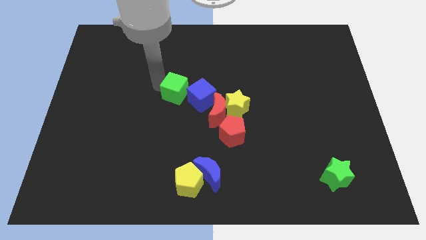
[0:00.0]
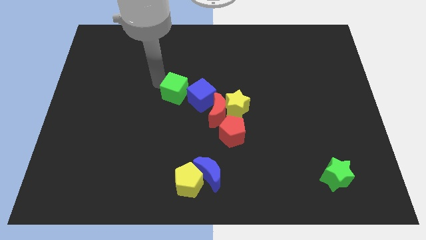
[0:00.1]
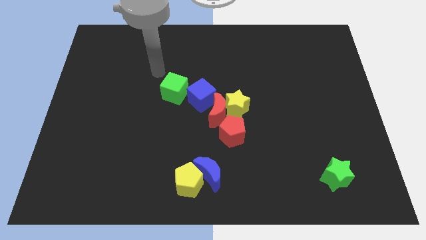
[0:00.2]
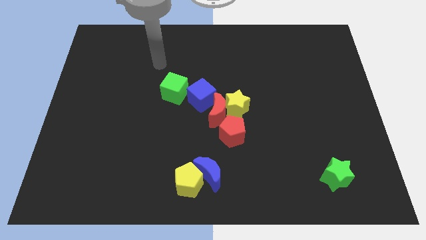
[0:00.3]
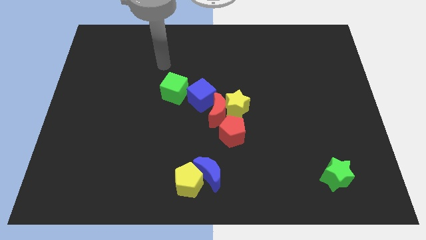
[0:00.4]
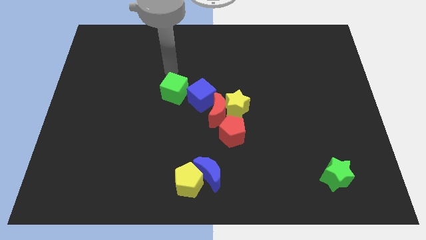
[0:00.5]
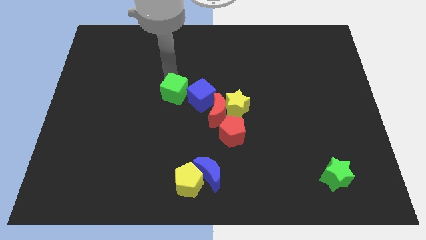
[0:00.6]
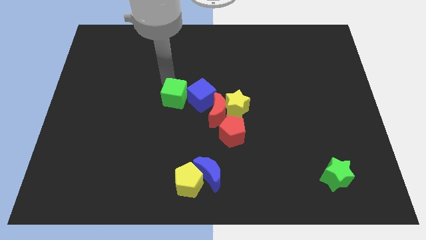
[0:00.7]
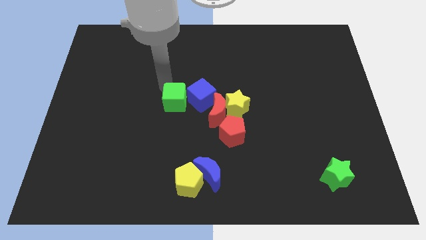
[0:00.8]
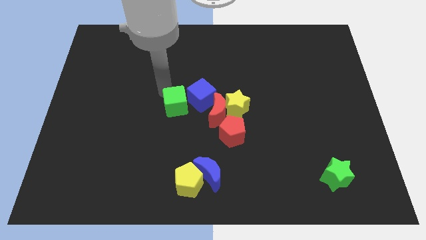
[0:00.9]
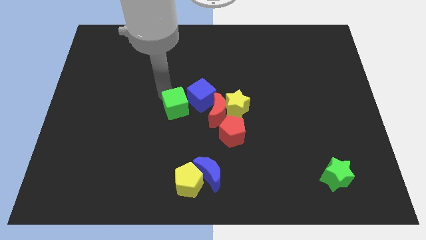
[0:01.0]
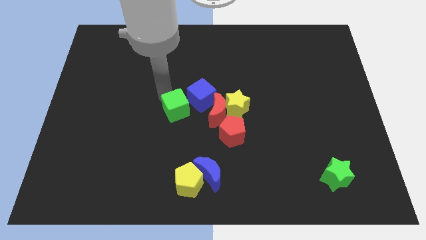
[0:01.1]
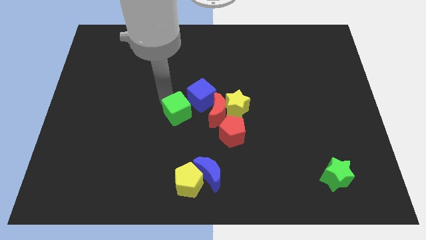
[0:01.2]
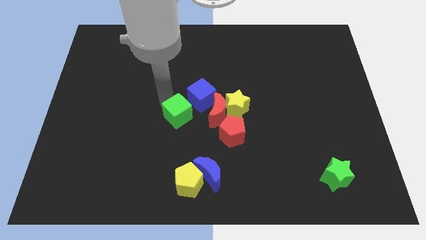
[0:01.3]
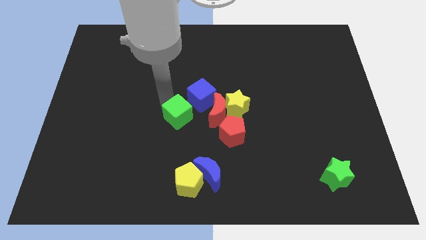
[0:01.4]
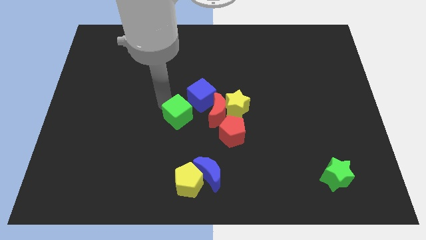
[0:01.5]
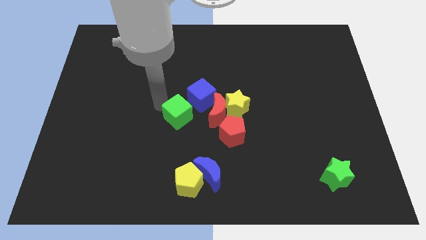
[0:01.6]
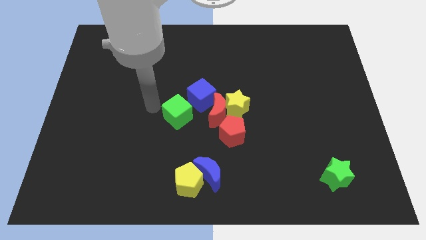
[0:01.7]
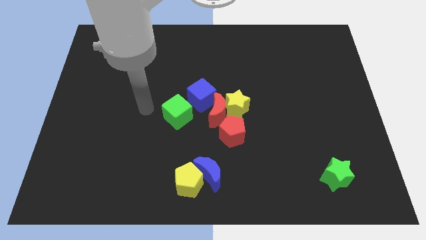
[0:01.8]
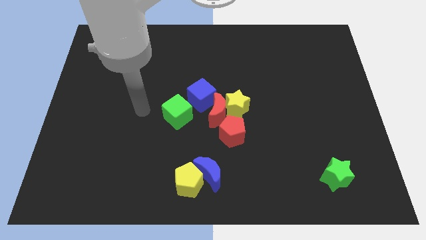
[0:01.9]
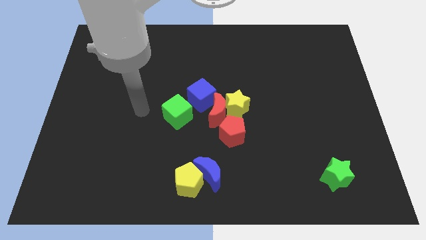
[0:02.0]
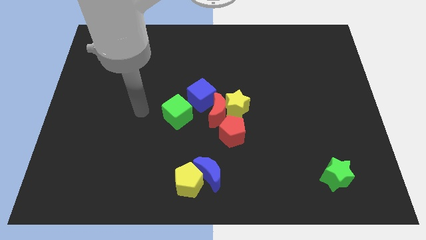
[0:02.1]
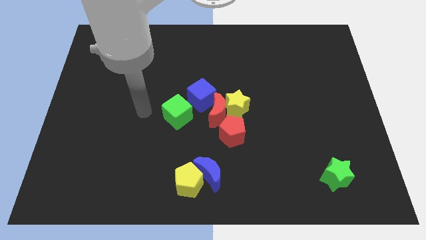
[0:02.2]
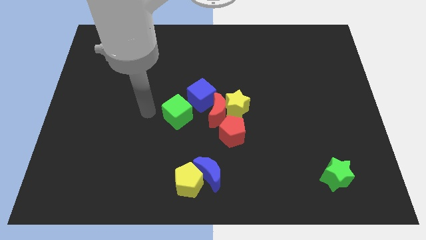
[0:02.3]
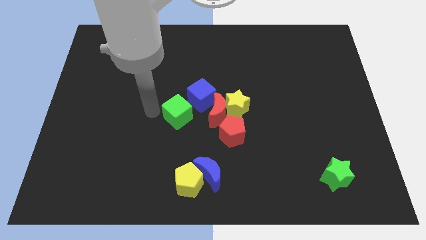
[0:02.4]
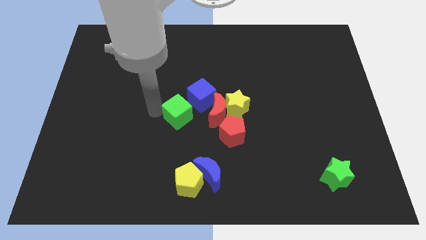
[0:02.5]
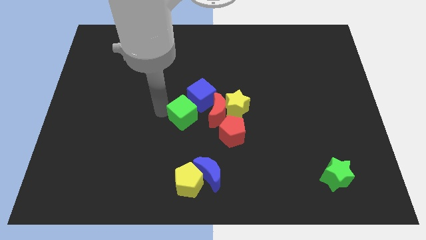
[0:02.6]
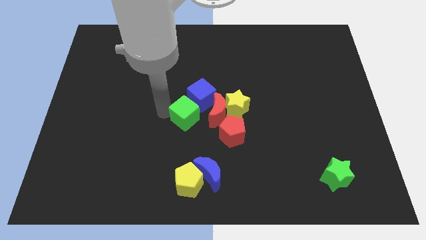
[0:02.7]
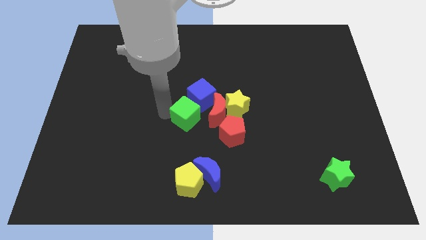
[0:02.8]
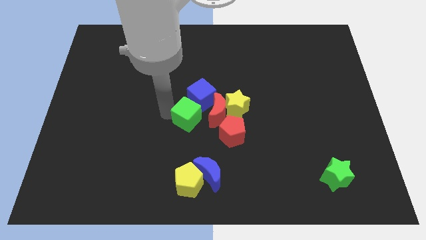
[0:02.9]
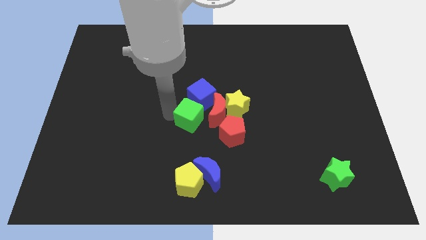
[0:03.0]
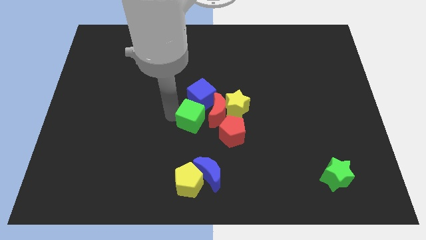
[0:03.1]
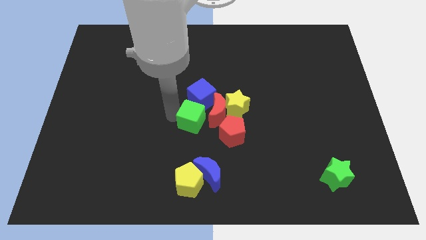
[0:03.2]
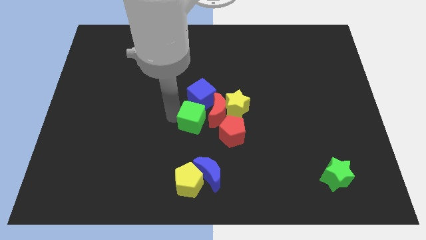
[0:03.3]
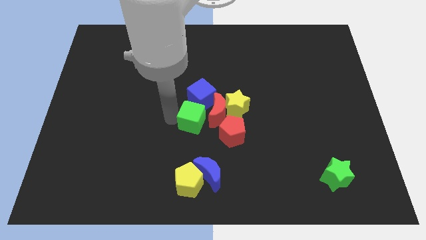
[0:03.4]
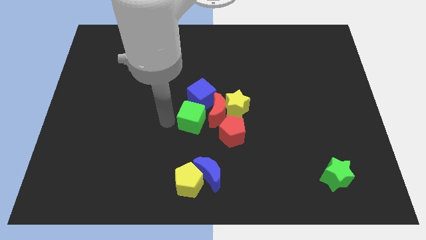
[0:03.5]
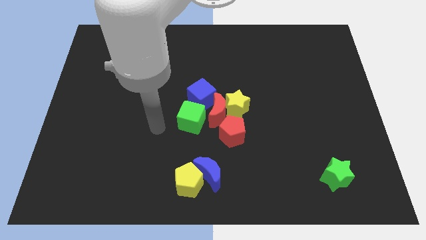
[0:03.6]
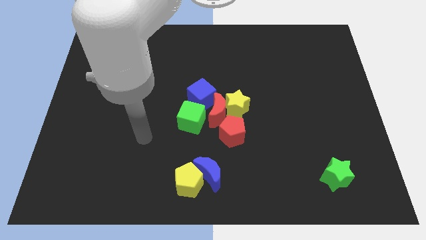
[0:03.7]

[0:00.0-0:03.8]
move the green cube to the left of the red crescent

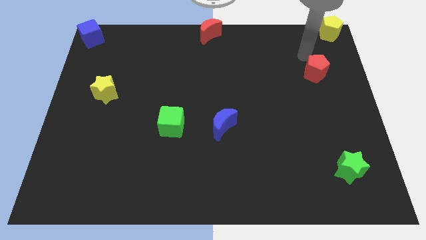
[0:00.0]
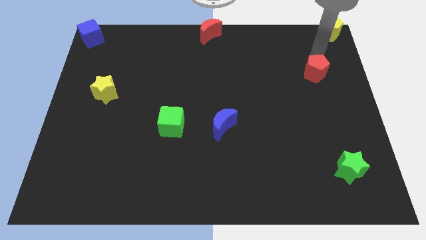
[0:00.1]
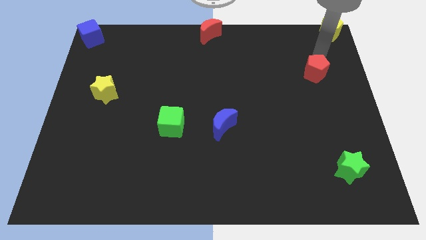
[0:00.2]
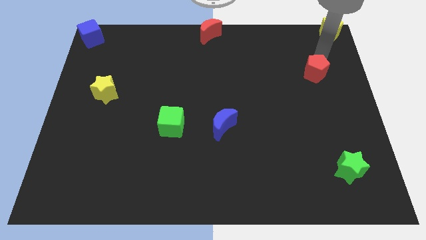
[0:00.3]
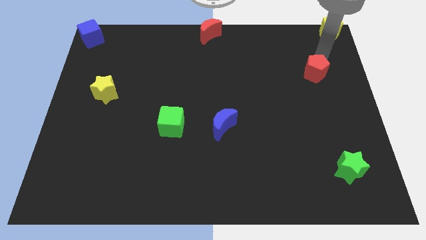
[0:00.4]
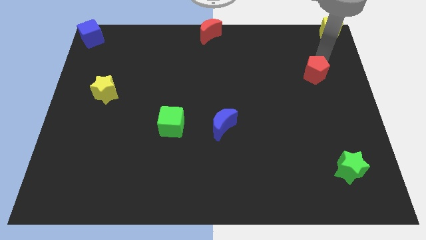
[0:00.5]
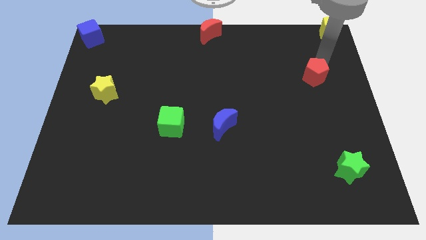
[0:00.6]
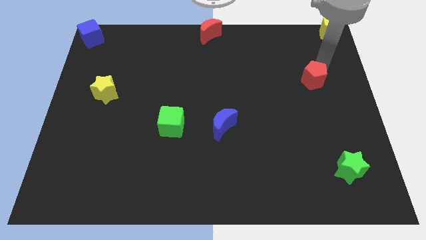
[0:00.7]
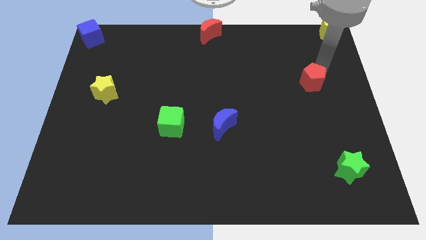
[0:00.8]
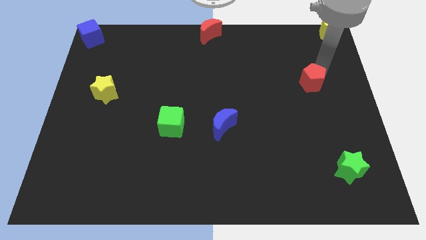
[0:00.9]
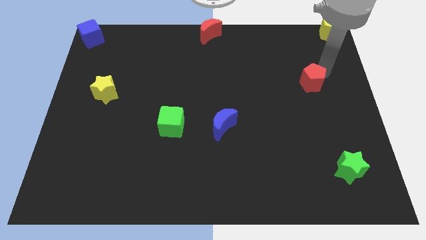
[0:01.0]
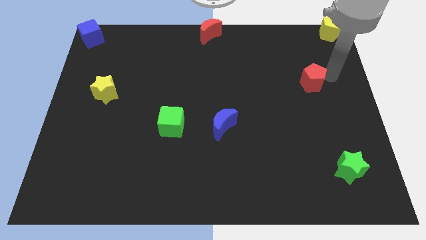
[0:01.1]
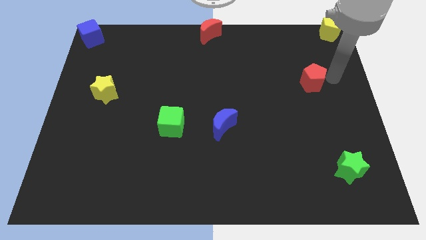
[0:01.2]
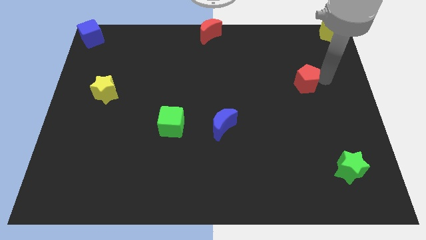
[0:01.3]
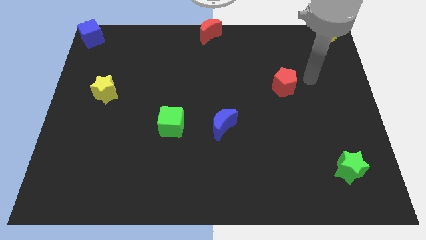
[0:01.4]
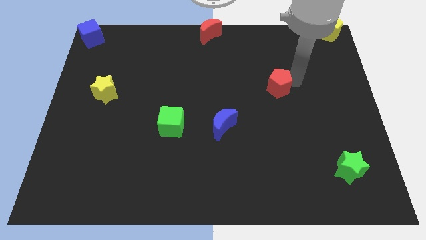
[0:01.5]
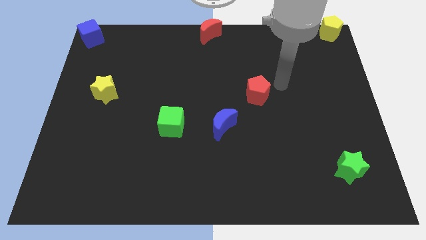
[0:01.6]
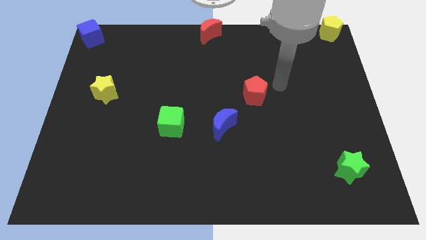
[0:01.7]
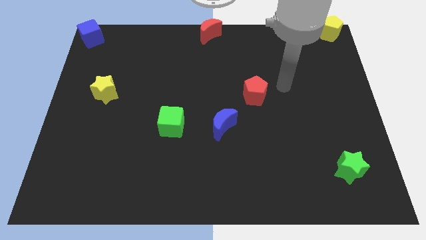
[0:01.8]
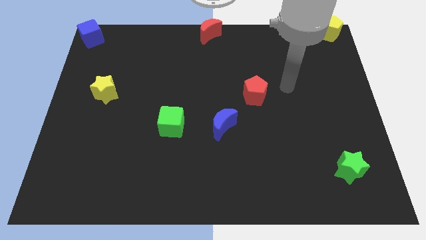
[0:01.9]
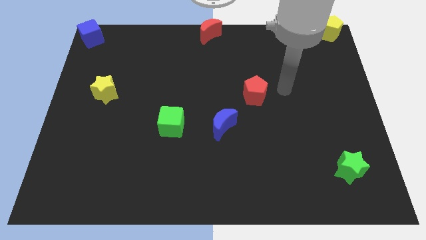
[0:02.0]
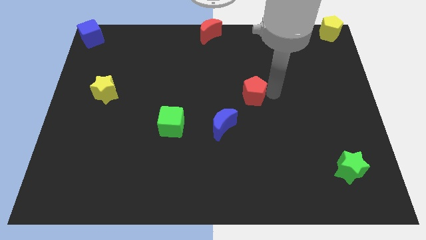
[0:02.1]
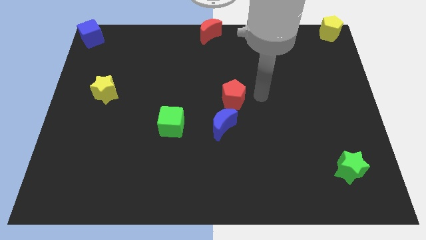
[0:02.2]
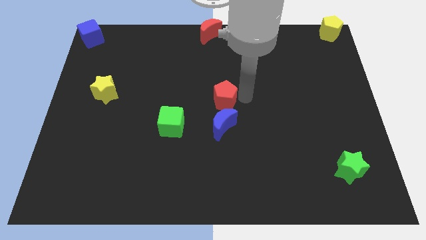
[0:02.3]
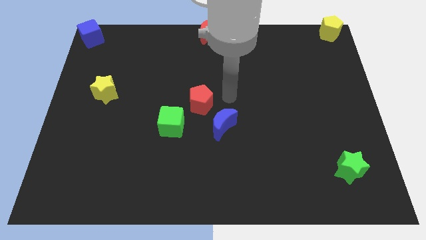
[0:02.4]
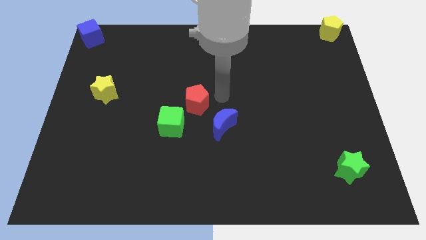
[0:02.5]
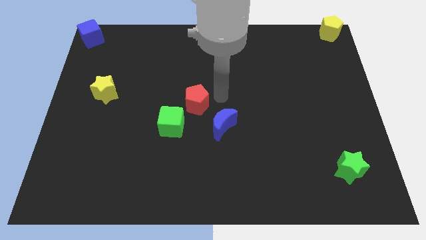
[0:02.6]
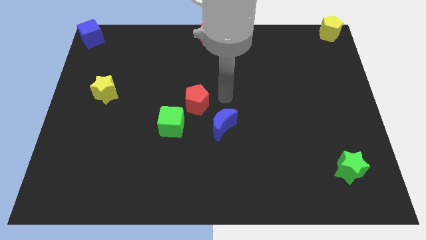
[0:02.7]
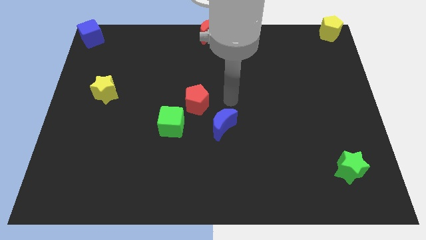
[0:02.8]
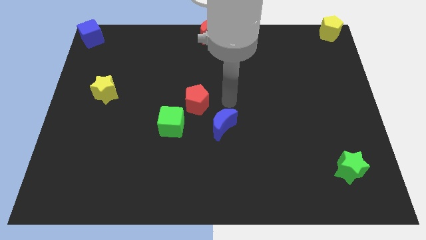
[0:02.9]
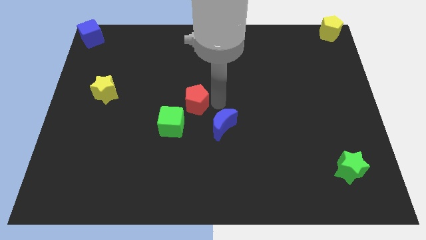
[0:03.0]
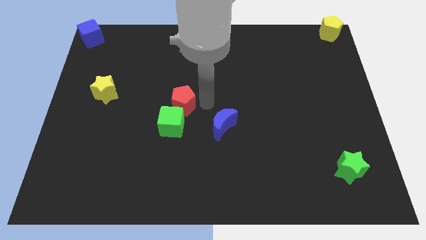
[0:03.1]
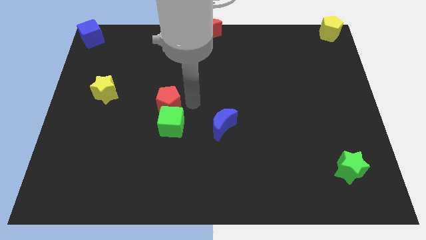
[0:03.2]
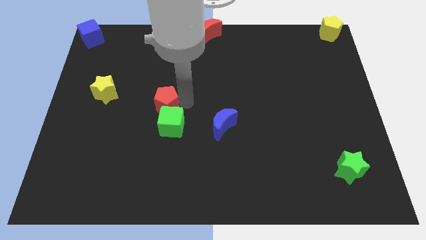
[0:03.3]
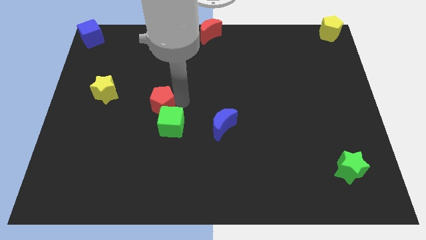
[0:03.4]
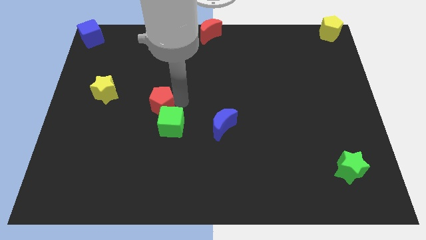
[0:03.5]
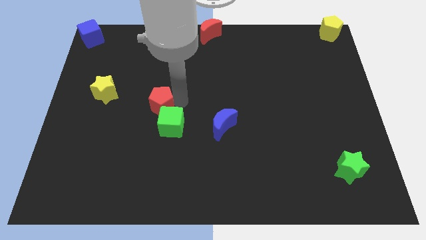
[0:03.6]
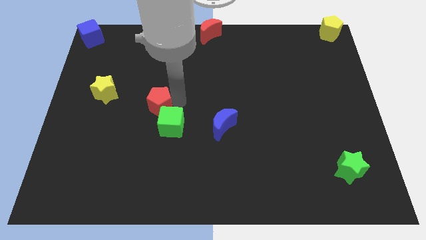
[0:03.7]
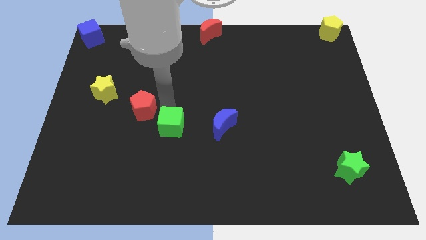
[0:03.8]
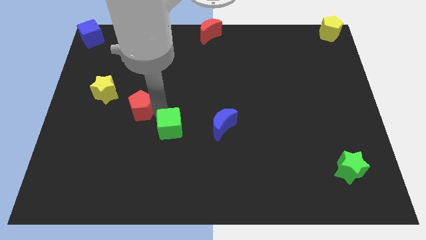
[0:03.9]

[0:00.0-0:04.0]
move the red pentagon diagonal to the green cube

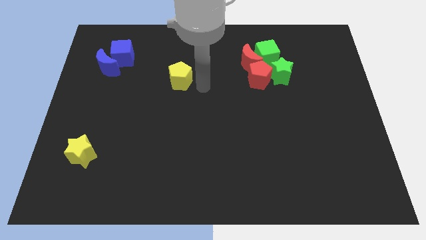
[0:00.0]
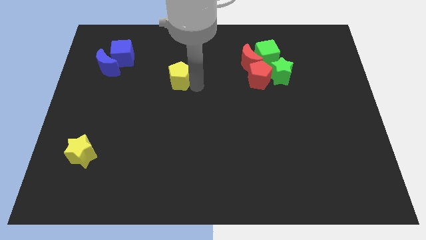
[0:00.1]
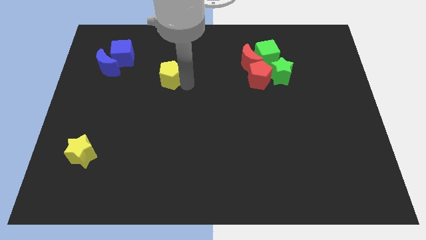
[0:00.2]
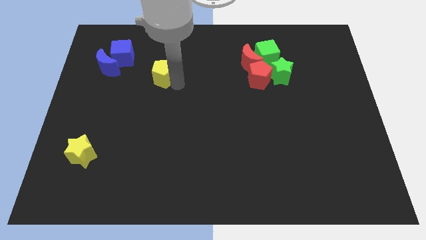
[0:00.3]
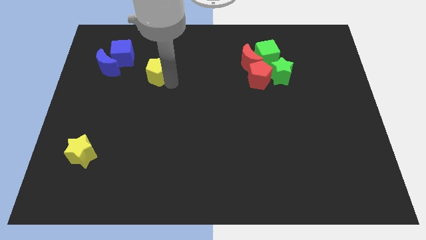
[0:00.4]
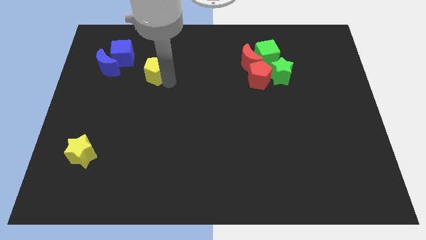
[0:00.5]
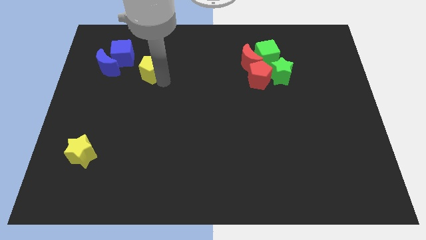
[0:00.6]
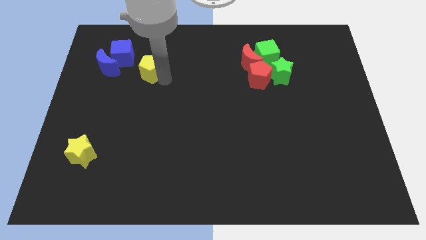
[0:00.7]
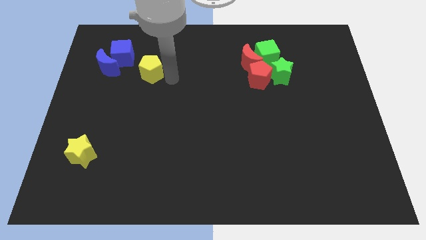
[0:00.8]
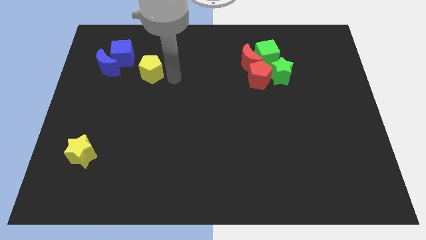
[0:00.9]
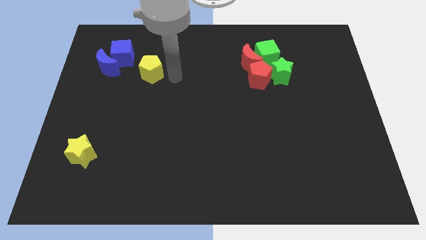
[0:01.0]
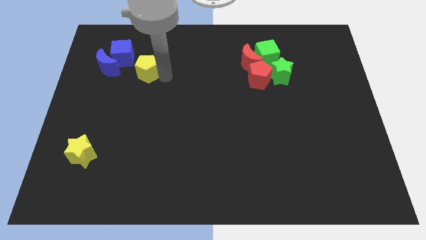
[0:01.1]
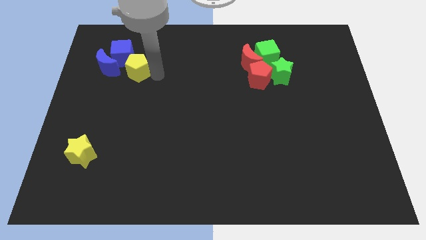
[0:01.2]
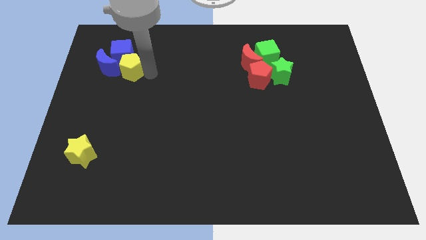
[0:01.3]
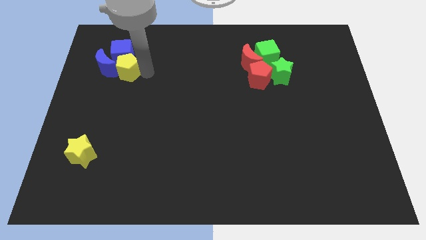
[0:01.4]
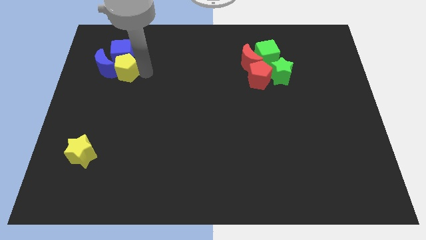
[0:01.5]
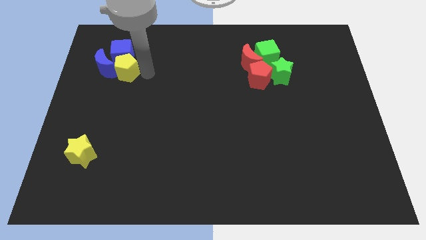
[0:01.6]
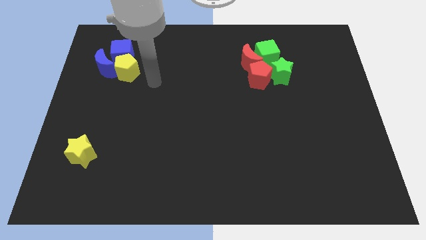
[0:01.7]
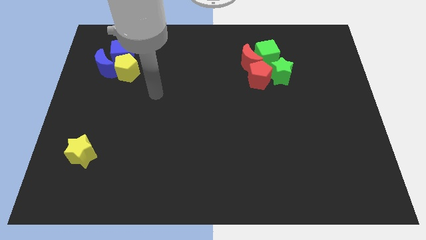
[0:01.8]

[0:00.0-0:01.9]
move the yellow pentagon towards the blue crescent
